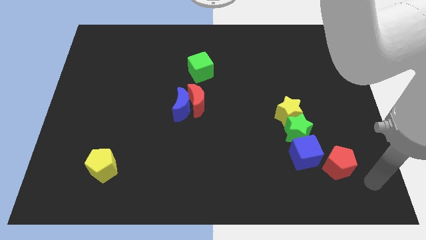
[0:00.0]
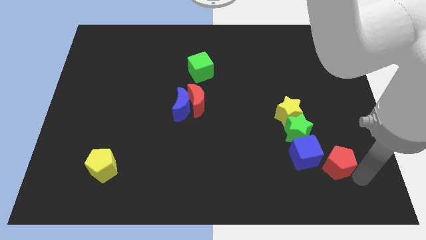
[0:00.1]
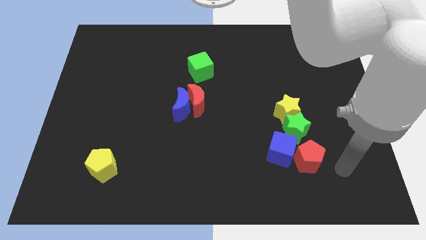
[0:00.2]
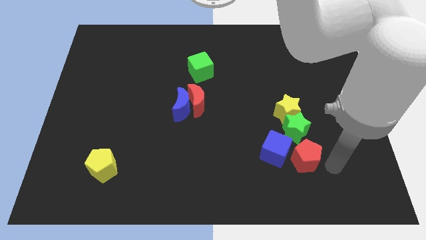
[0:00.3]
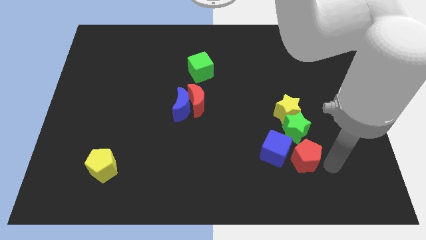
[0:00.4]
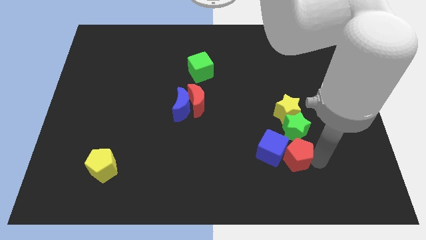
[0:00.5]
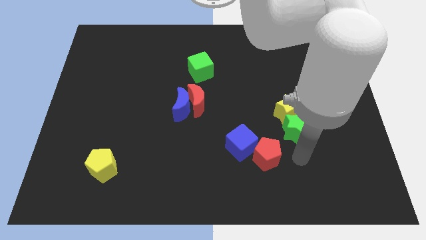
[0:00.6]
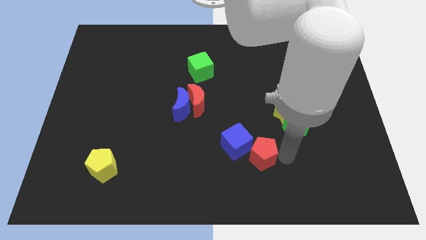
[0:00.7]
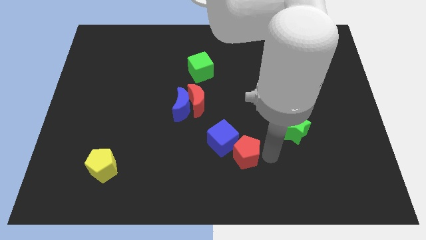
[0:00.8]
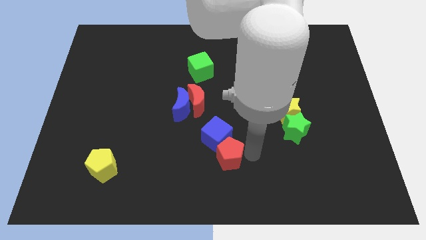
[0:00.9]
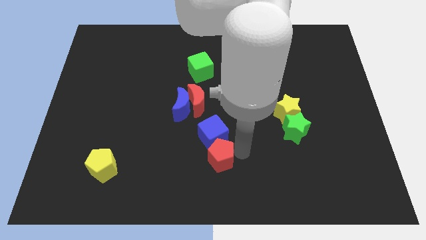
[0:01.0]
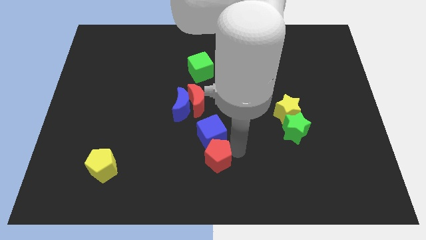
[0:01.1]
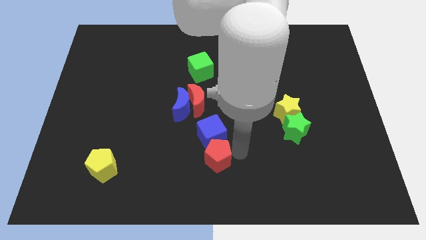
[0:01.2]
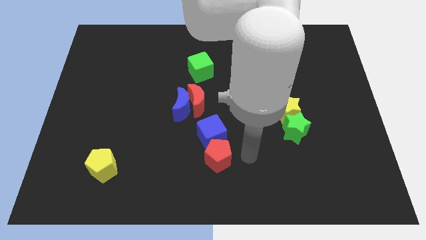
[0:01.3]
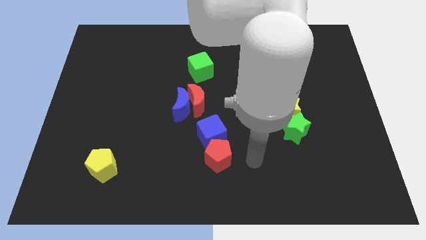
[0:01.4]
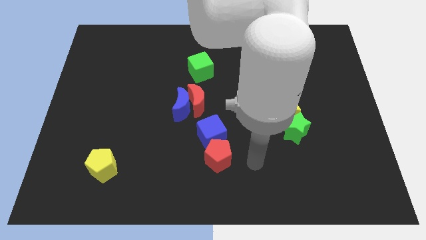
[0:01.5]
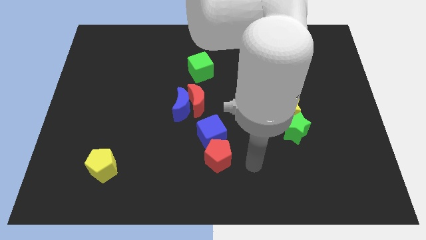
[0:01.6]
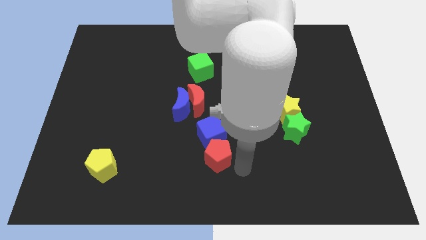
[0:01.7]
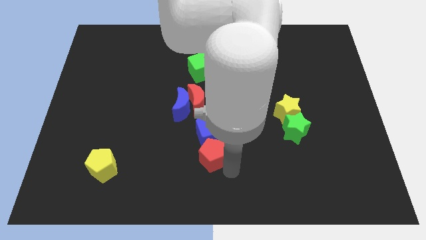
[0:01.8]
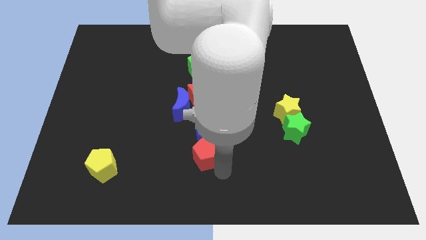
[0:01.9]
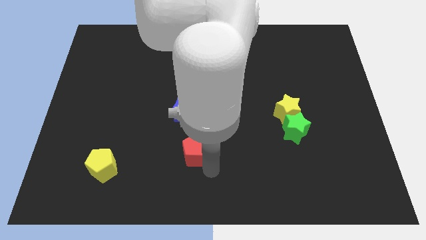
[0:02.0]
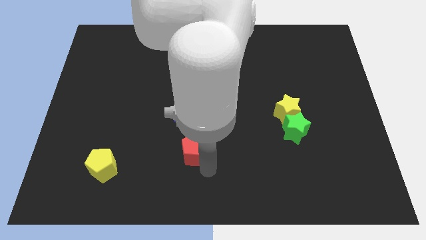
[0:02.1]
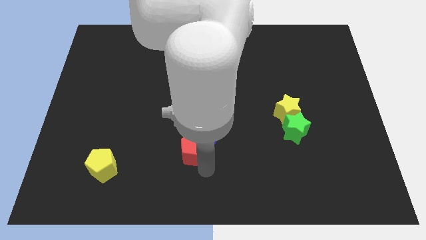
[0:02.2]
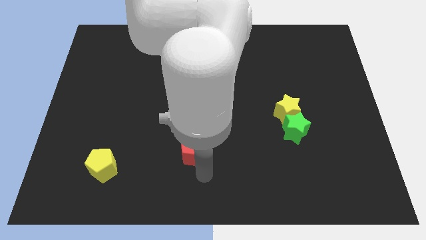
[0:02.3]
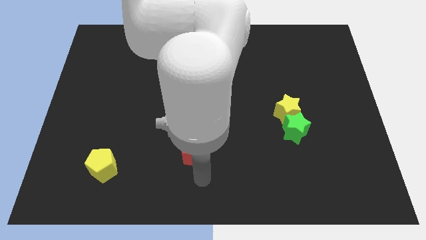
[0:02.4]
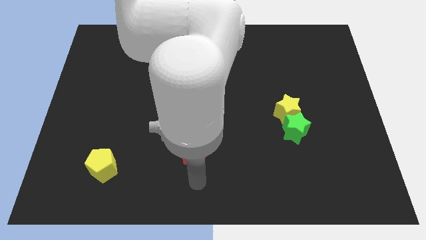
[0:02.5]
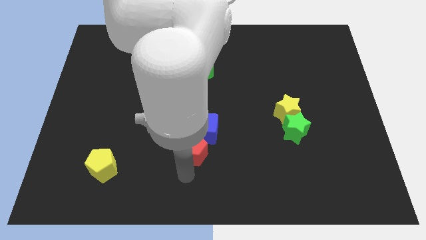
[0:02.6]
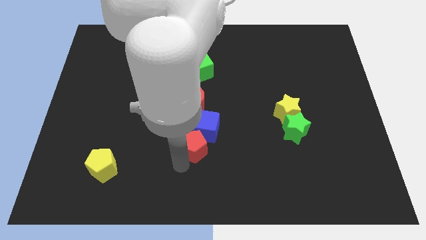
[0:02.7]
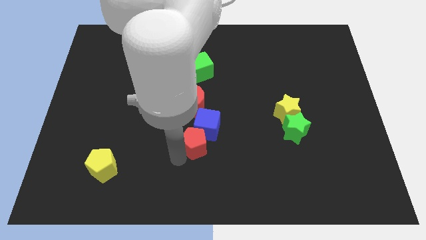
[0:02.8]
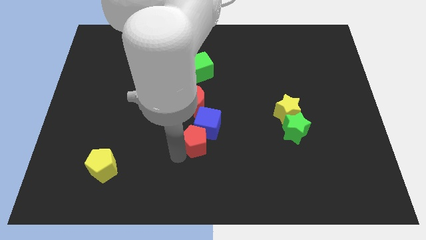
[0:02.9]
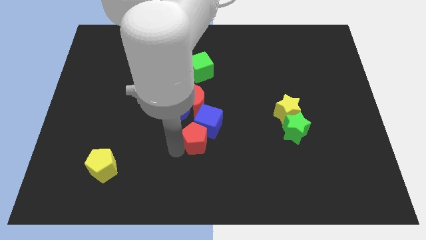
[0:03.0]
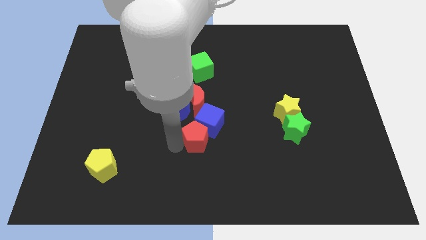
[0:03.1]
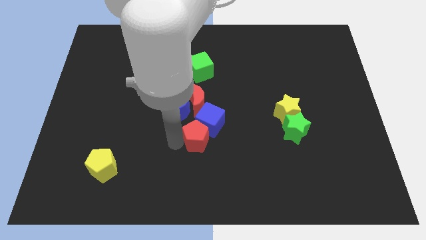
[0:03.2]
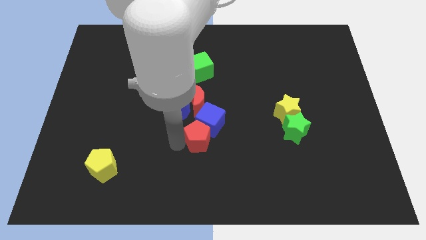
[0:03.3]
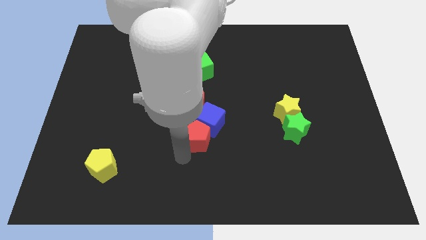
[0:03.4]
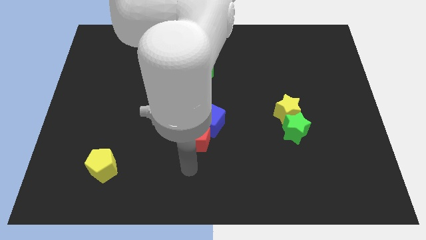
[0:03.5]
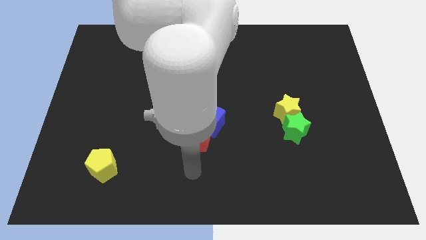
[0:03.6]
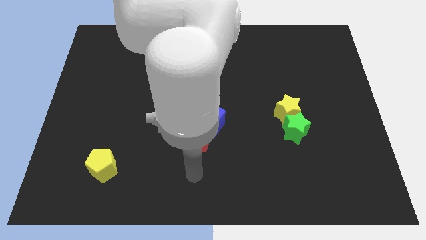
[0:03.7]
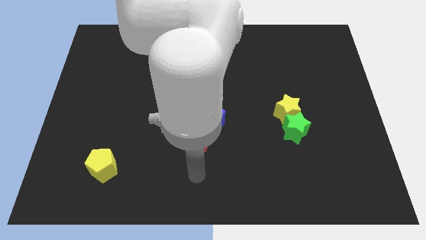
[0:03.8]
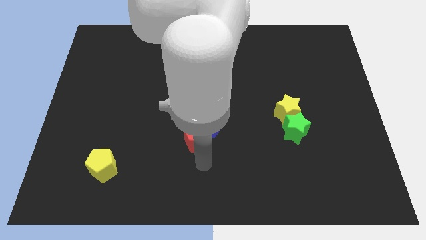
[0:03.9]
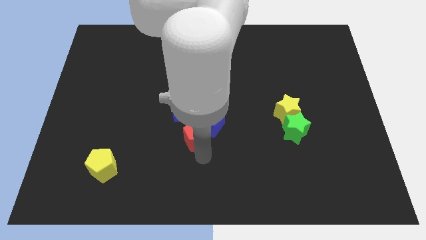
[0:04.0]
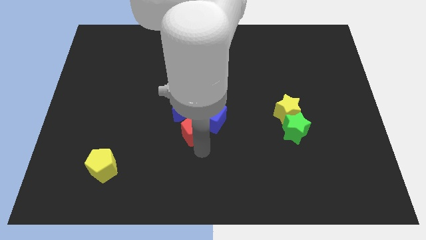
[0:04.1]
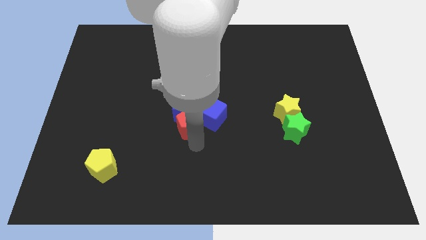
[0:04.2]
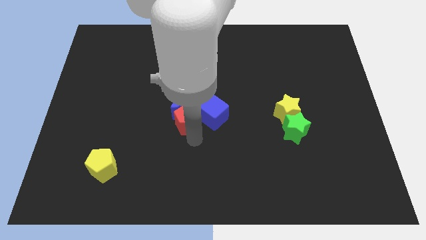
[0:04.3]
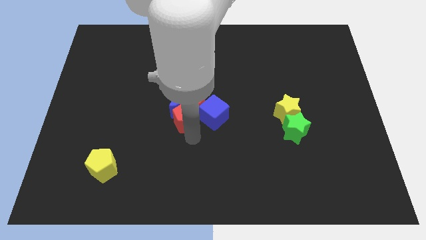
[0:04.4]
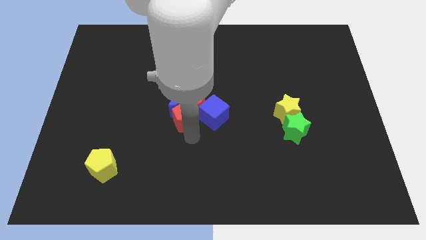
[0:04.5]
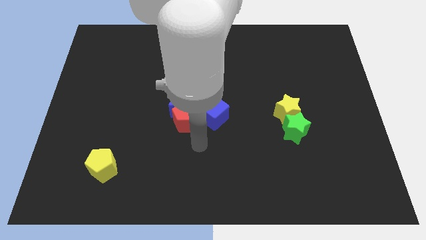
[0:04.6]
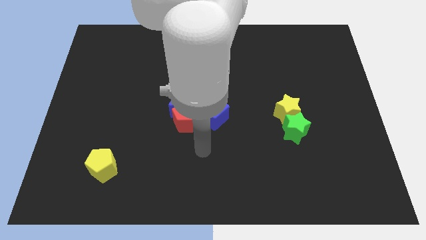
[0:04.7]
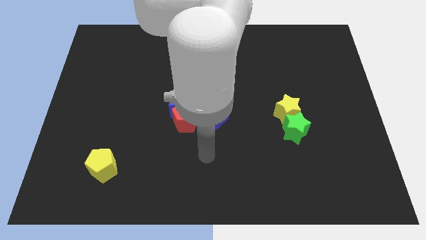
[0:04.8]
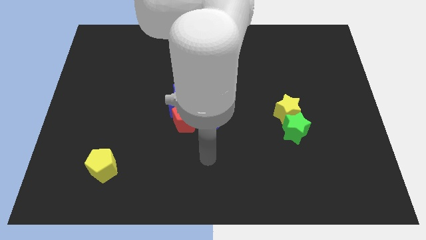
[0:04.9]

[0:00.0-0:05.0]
push the blue cube with the red pentagon towards center of the board

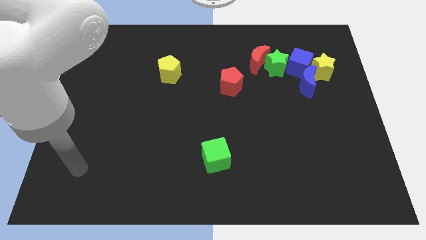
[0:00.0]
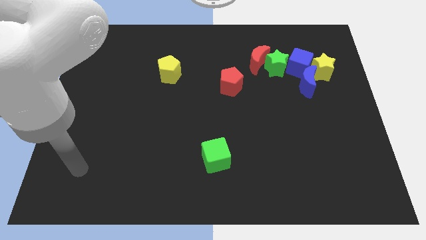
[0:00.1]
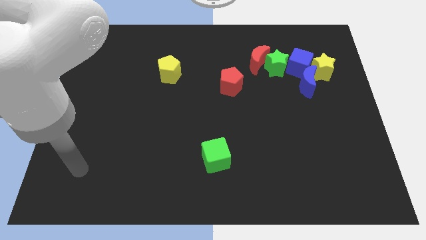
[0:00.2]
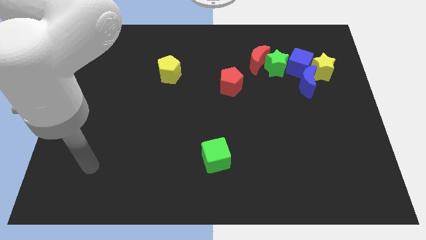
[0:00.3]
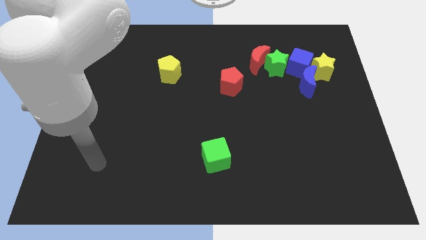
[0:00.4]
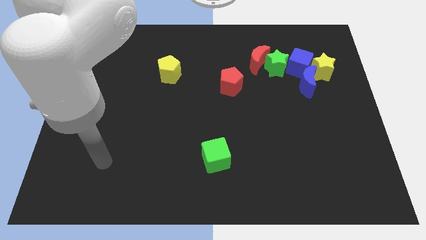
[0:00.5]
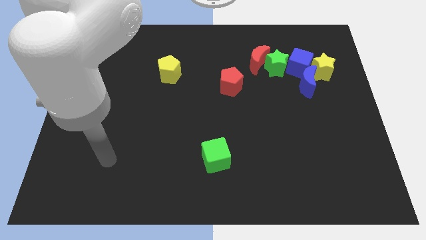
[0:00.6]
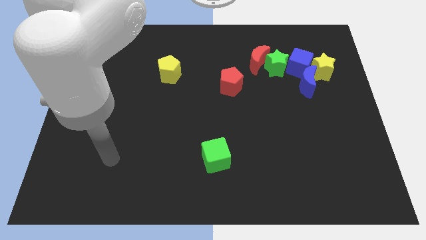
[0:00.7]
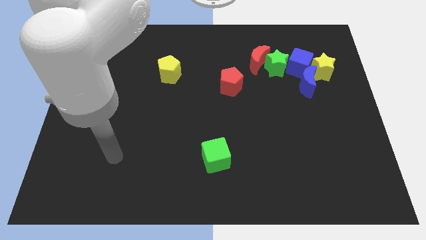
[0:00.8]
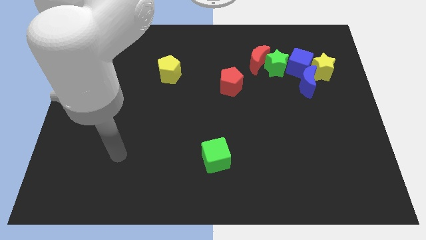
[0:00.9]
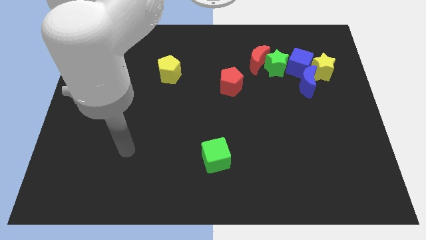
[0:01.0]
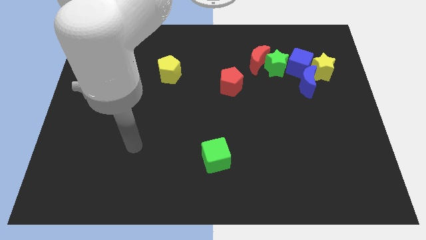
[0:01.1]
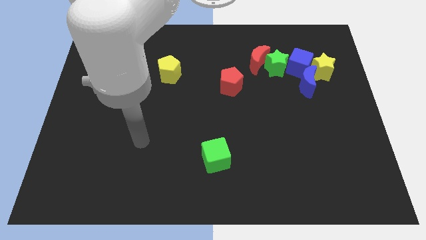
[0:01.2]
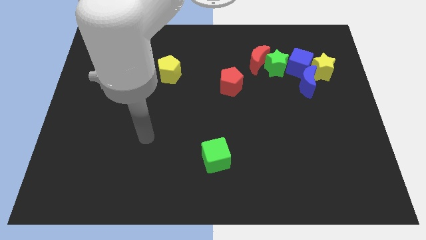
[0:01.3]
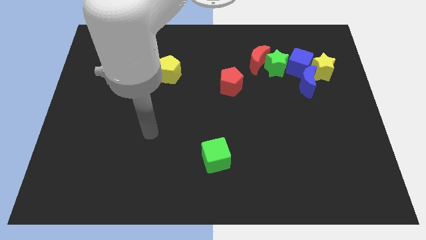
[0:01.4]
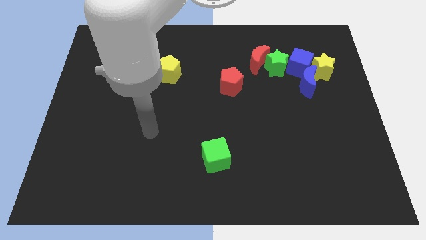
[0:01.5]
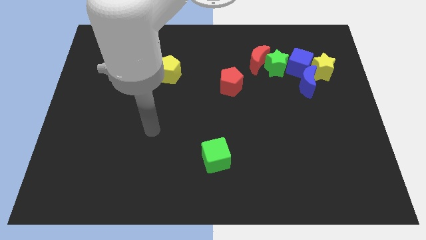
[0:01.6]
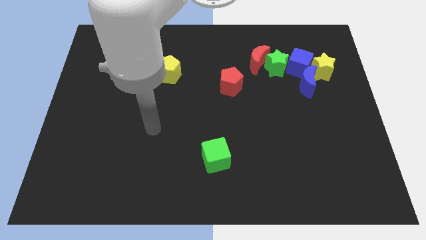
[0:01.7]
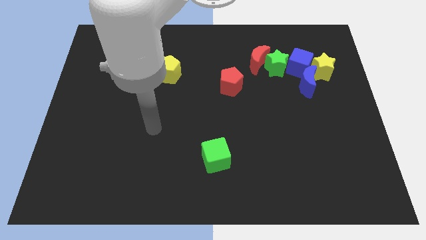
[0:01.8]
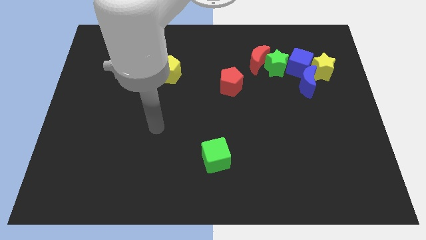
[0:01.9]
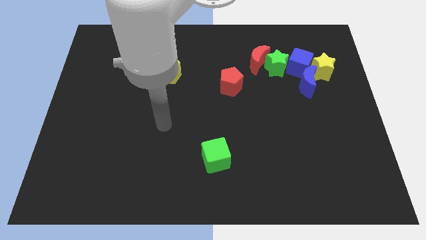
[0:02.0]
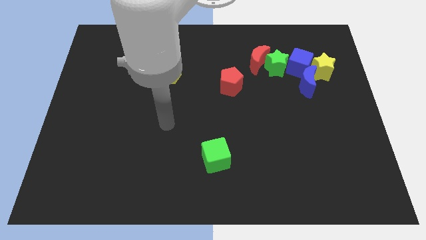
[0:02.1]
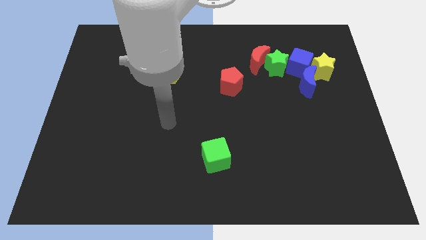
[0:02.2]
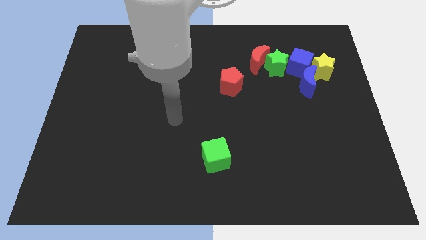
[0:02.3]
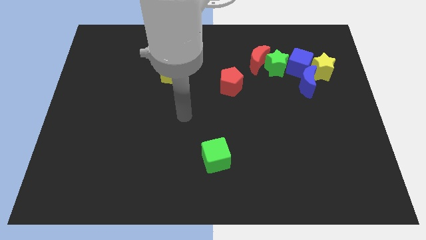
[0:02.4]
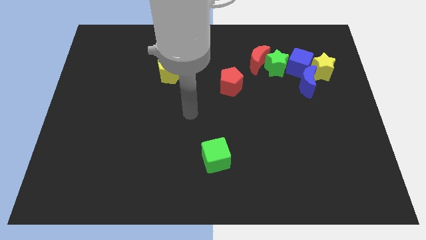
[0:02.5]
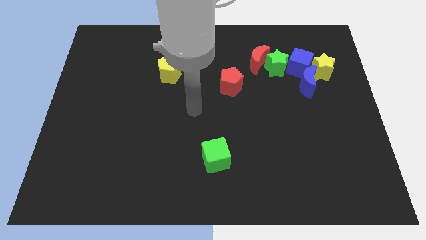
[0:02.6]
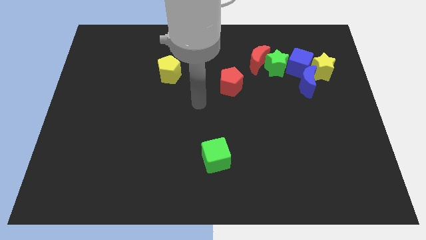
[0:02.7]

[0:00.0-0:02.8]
move your arm close to the red pentagon

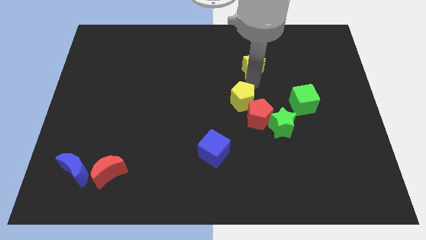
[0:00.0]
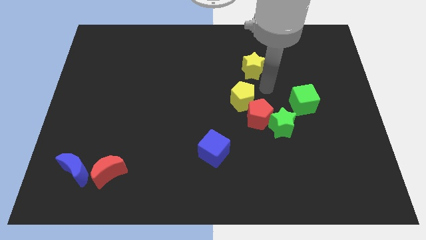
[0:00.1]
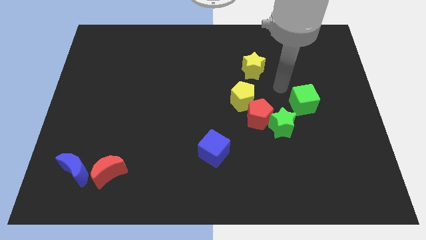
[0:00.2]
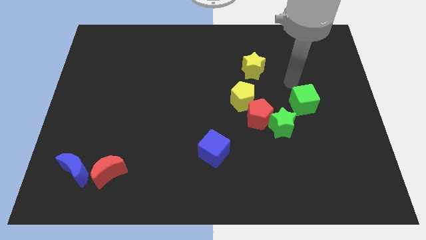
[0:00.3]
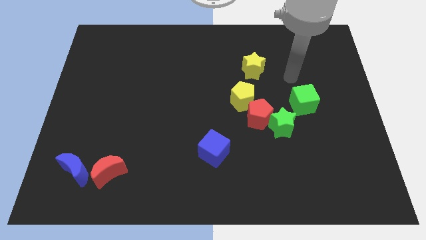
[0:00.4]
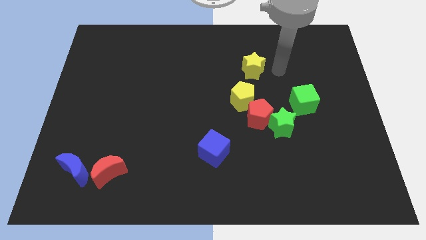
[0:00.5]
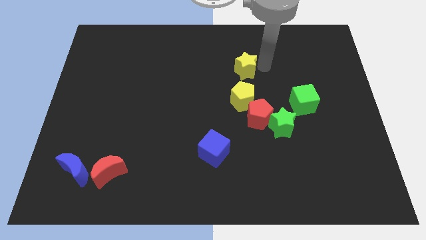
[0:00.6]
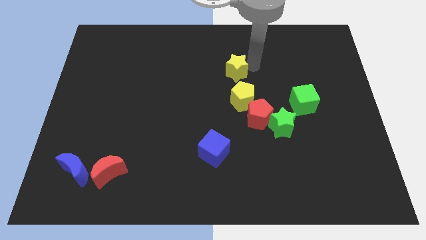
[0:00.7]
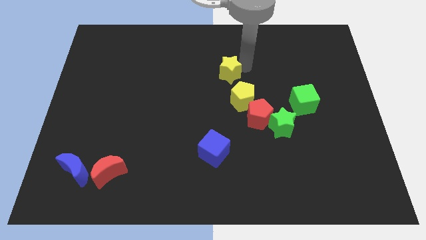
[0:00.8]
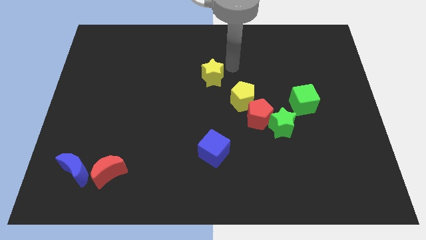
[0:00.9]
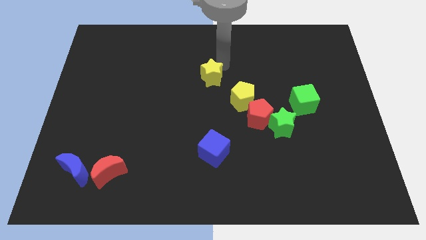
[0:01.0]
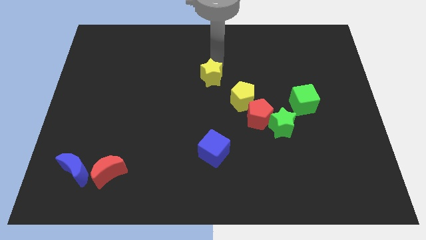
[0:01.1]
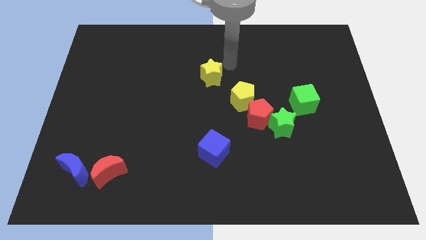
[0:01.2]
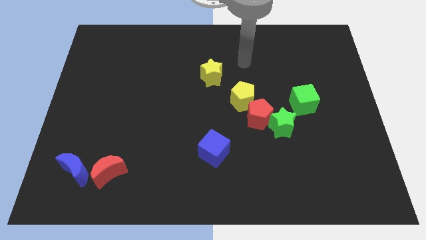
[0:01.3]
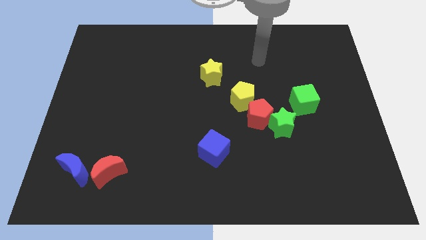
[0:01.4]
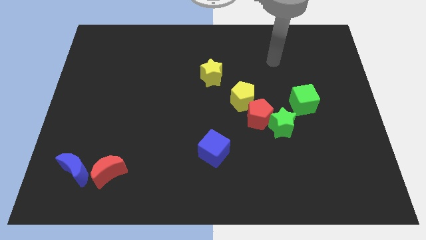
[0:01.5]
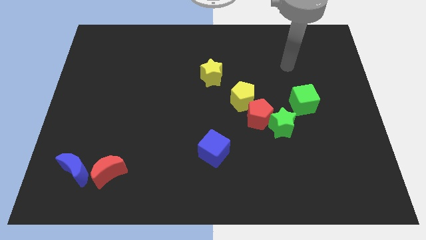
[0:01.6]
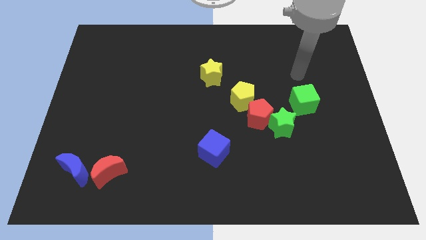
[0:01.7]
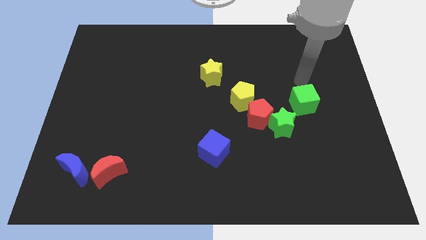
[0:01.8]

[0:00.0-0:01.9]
push yellow star to the center of the board
